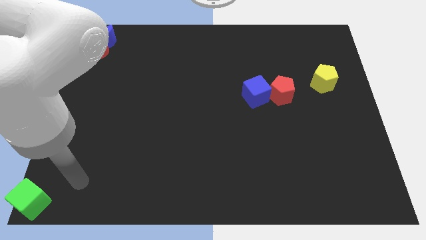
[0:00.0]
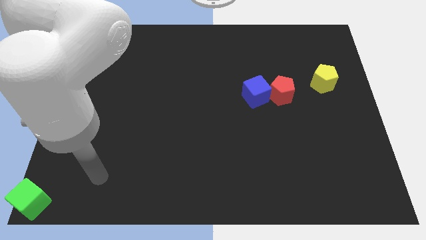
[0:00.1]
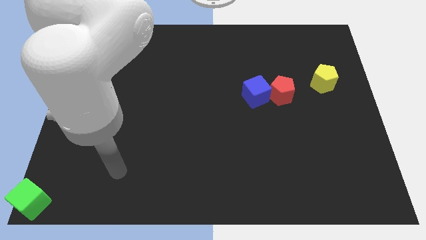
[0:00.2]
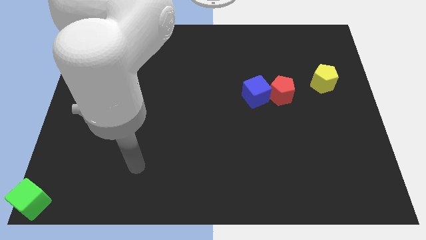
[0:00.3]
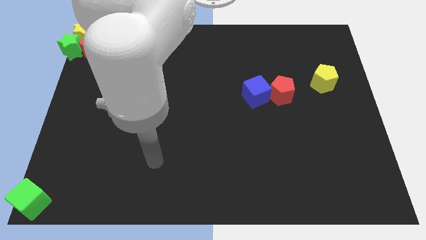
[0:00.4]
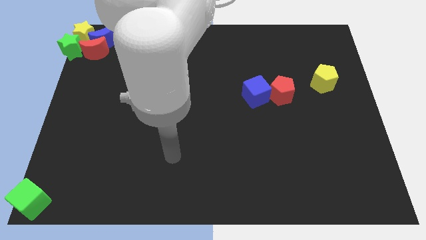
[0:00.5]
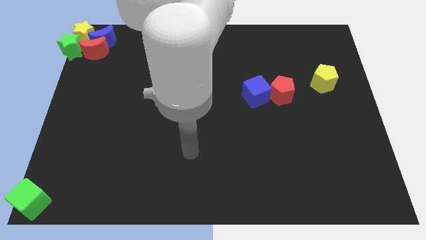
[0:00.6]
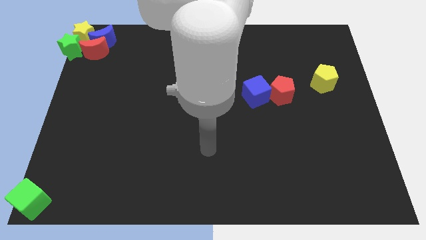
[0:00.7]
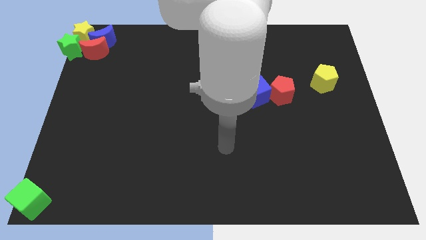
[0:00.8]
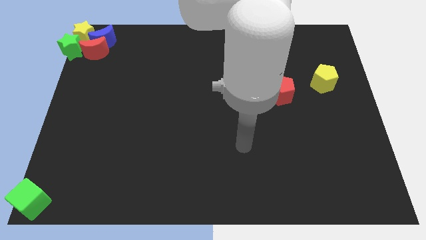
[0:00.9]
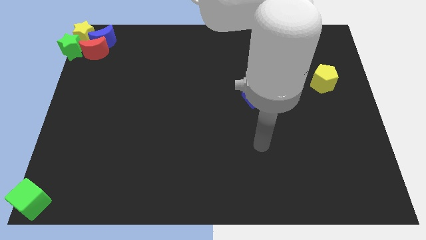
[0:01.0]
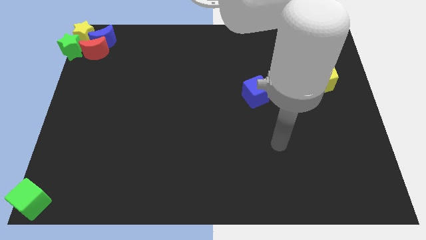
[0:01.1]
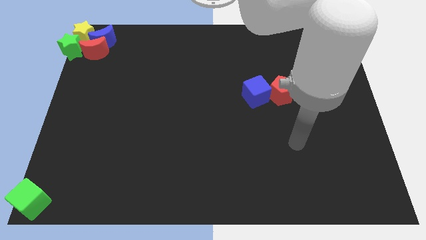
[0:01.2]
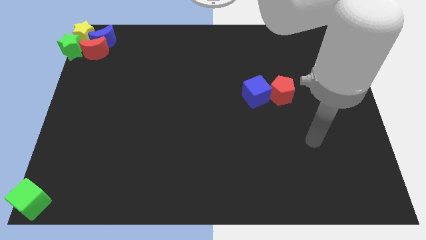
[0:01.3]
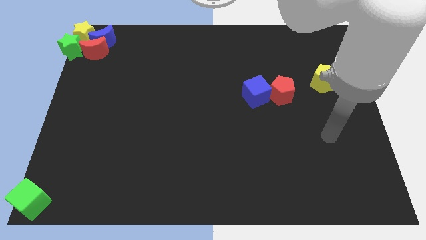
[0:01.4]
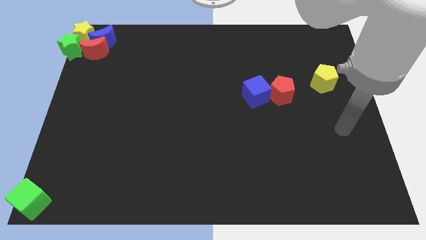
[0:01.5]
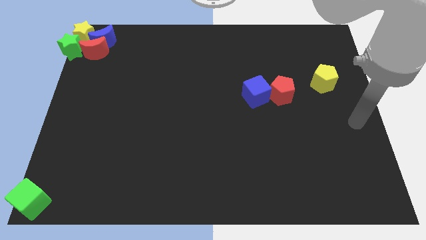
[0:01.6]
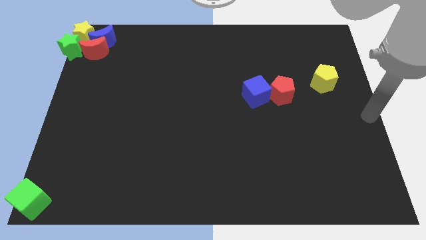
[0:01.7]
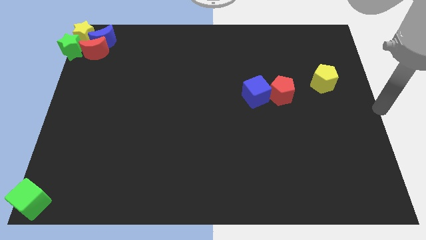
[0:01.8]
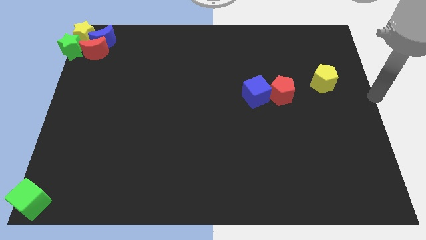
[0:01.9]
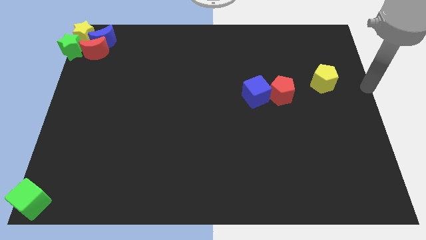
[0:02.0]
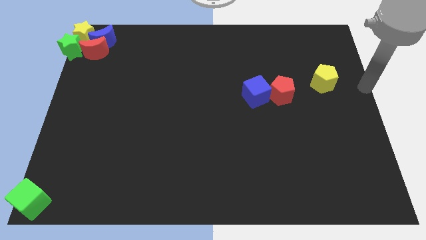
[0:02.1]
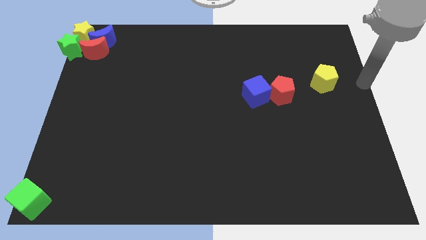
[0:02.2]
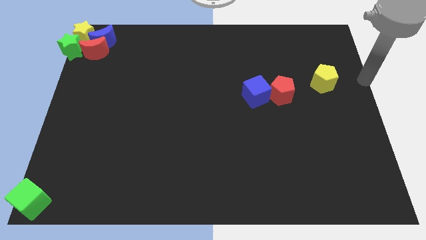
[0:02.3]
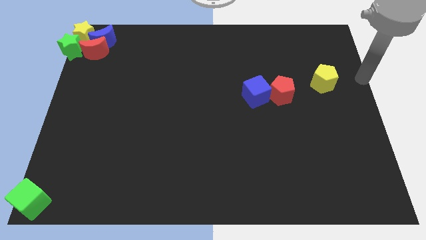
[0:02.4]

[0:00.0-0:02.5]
move your arm to the centre right of the board

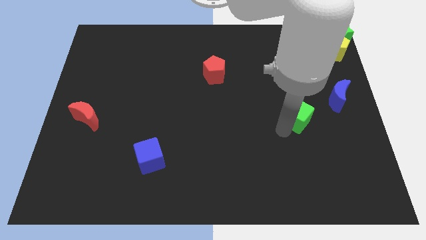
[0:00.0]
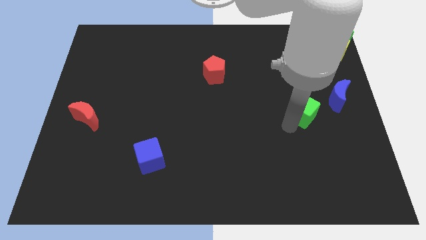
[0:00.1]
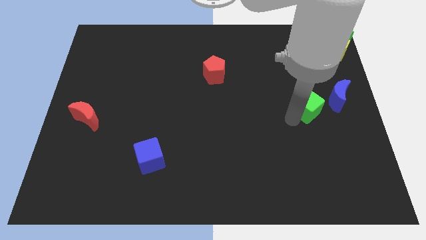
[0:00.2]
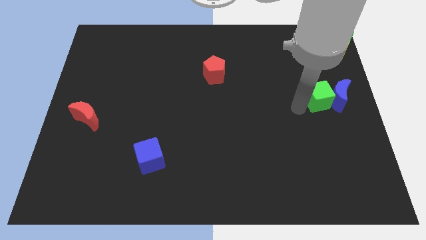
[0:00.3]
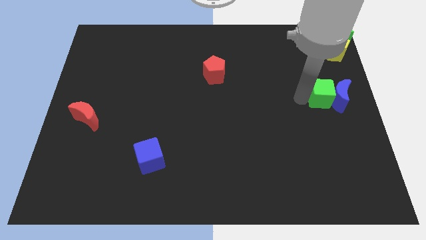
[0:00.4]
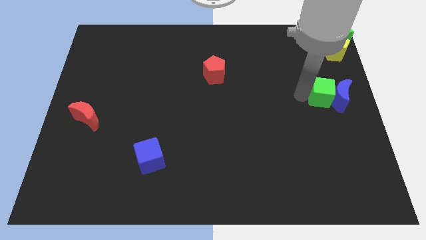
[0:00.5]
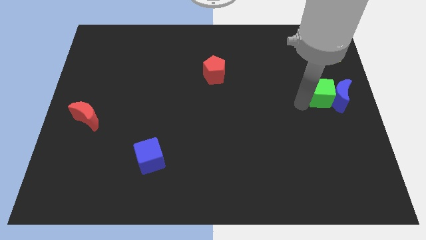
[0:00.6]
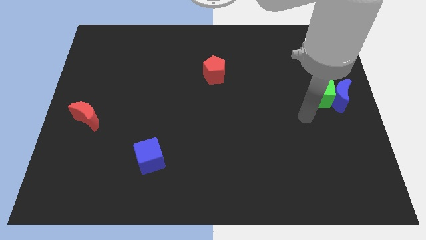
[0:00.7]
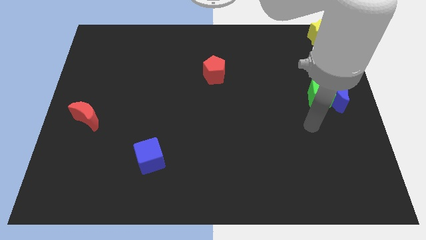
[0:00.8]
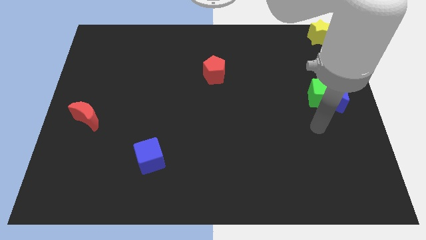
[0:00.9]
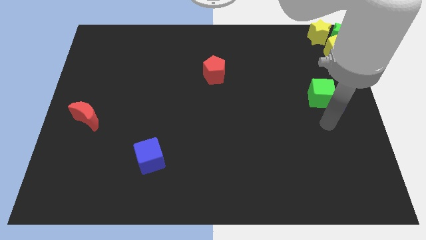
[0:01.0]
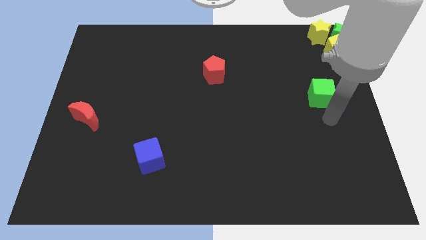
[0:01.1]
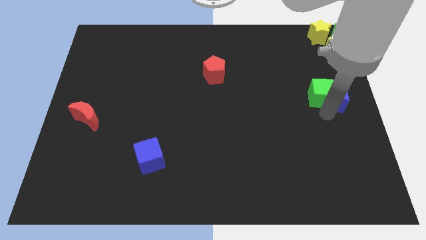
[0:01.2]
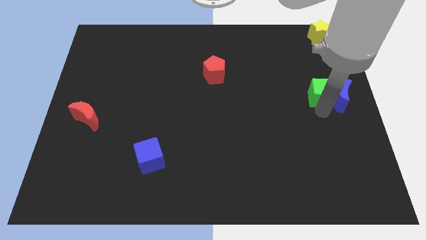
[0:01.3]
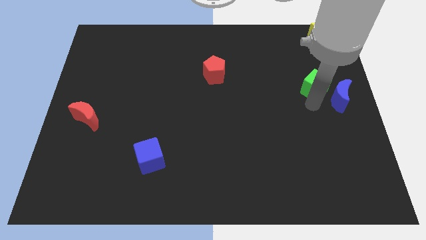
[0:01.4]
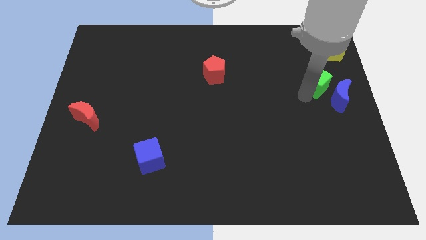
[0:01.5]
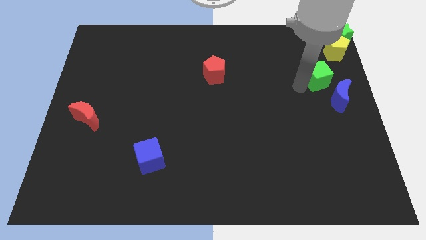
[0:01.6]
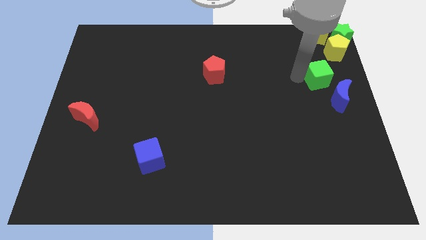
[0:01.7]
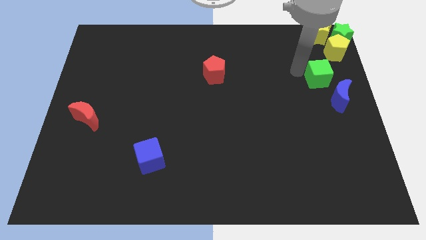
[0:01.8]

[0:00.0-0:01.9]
place the green cube diagonally below the yellow pentagon

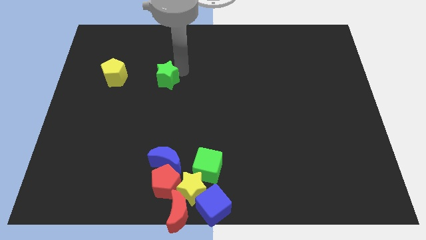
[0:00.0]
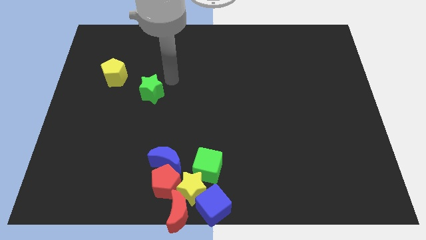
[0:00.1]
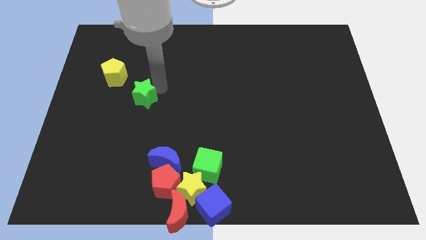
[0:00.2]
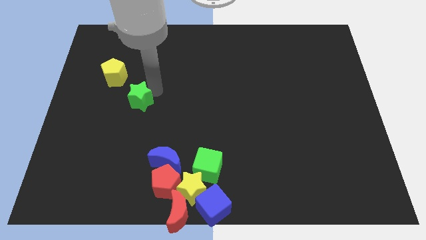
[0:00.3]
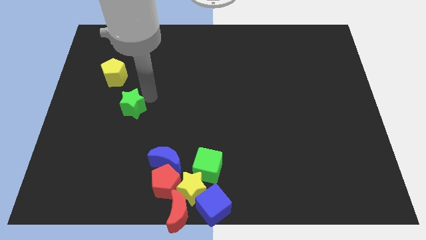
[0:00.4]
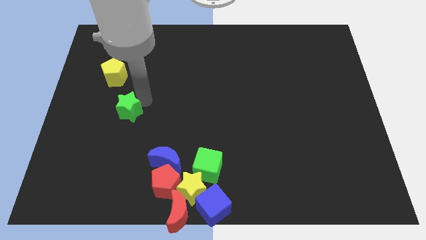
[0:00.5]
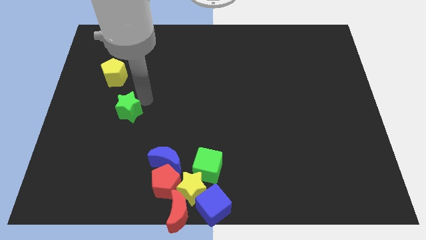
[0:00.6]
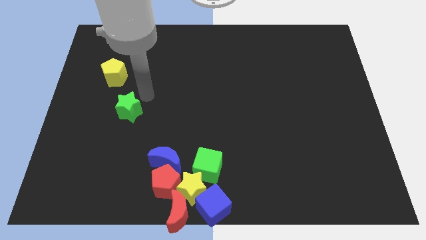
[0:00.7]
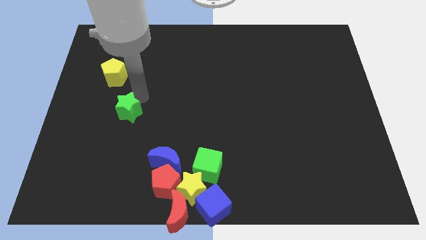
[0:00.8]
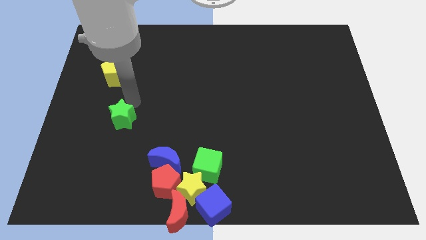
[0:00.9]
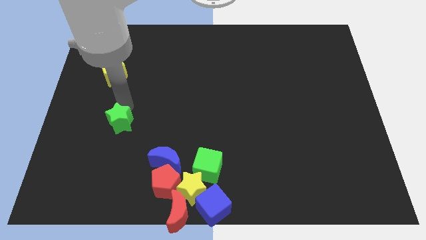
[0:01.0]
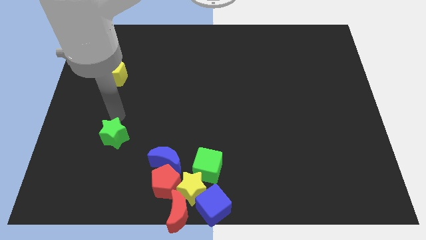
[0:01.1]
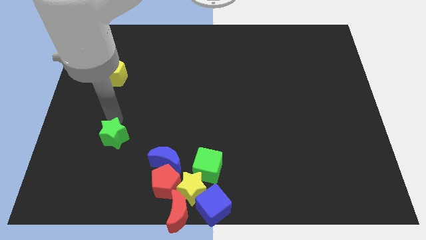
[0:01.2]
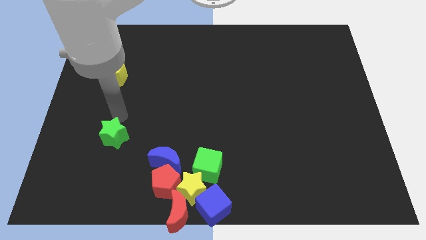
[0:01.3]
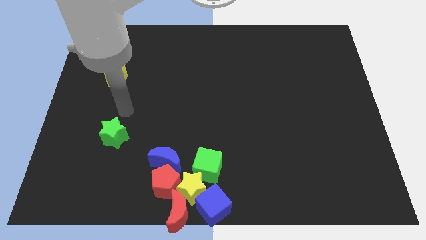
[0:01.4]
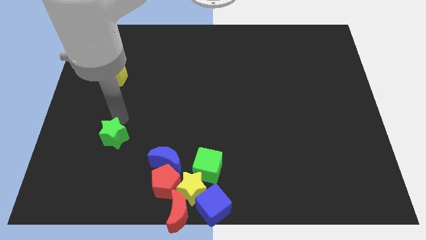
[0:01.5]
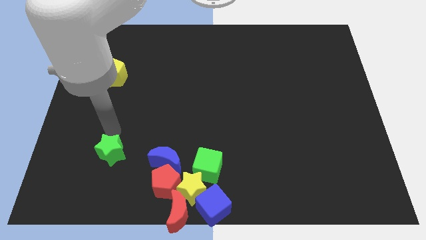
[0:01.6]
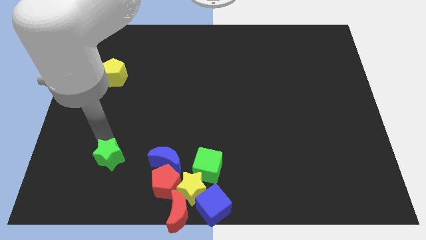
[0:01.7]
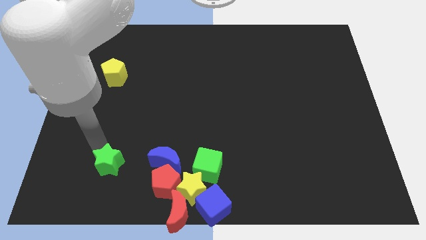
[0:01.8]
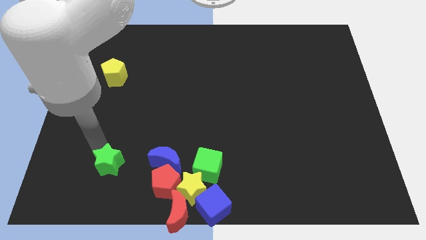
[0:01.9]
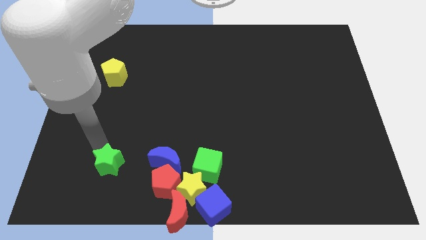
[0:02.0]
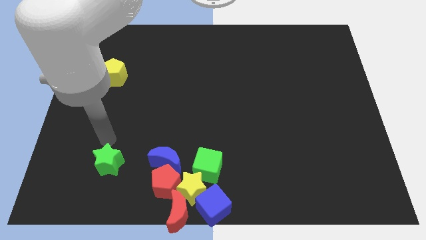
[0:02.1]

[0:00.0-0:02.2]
place the green star left to the blue crescent

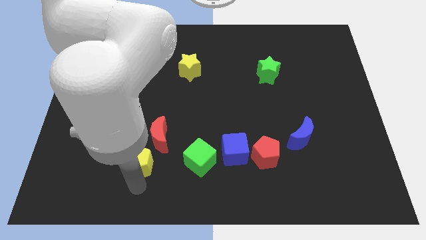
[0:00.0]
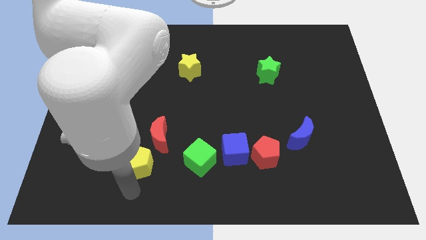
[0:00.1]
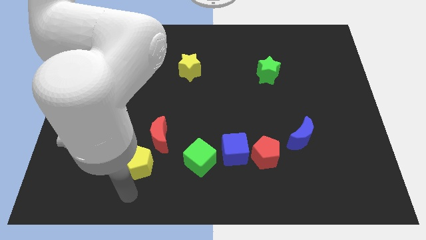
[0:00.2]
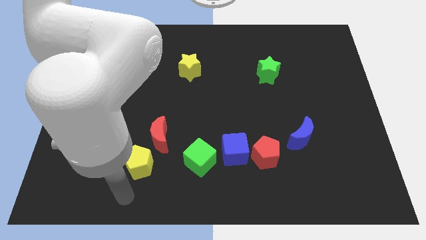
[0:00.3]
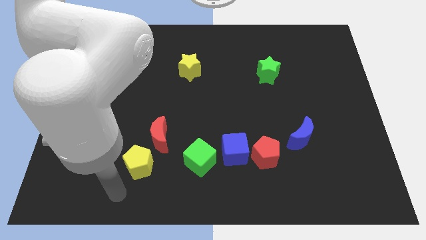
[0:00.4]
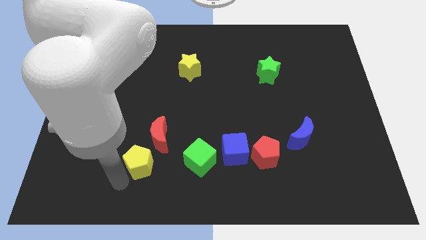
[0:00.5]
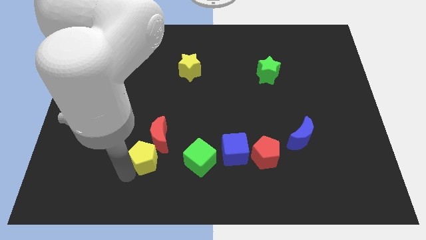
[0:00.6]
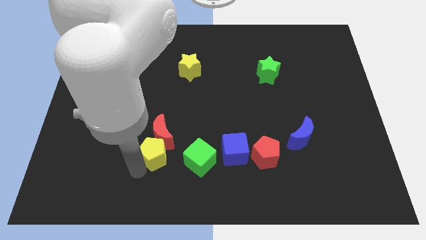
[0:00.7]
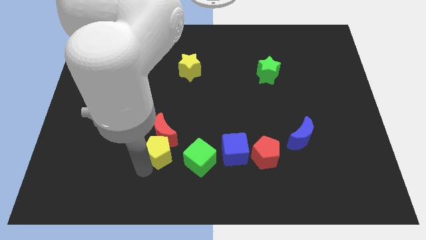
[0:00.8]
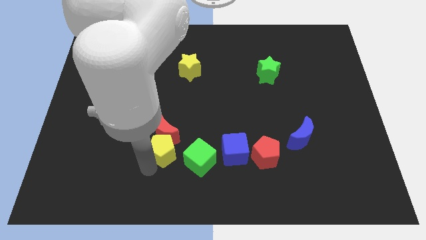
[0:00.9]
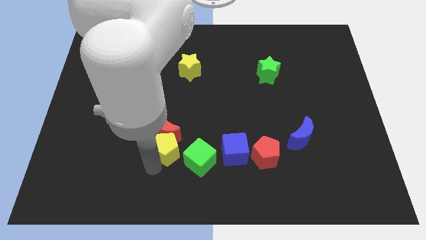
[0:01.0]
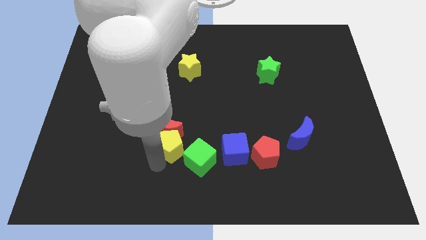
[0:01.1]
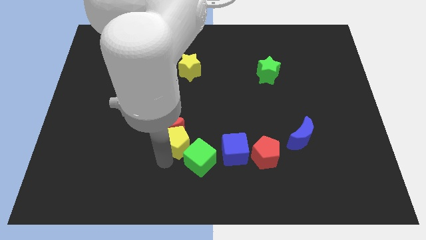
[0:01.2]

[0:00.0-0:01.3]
push the yellow pentagon into the red moon

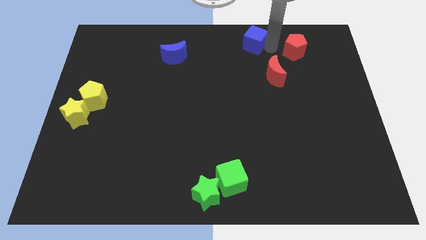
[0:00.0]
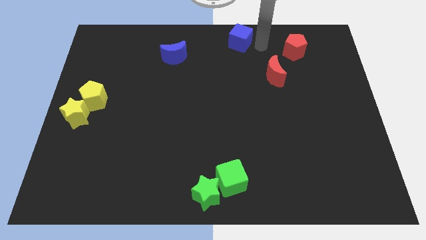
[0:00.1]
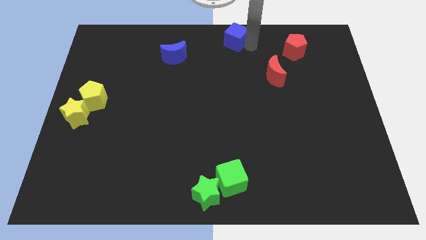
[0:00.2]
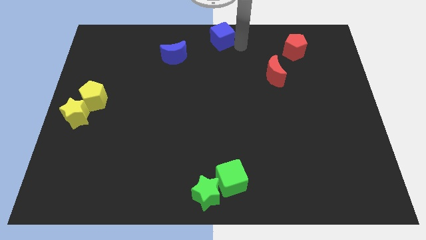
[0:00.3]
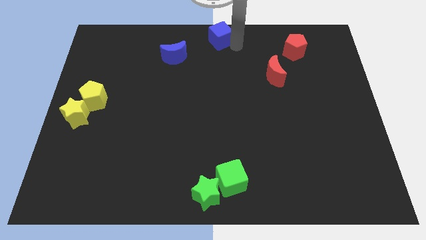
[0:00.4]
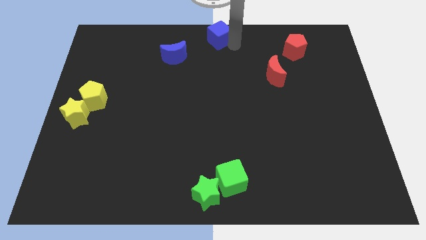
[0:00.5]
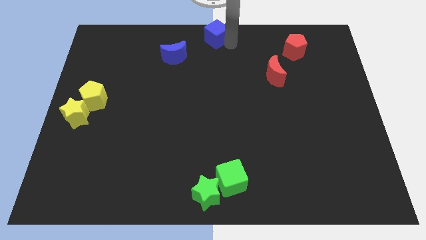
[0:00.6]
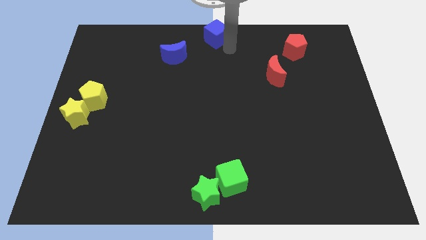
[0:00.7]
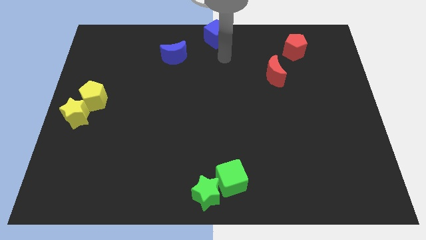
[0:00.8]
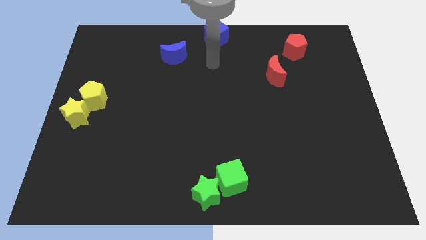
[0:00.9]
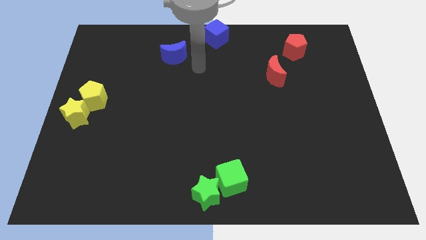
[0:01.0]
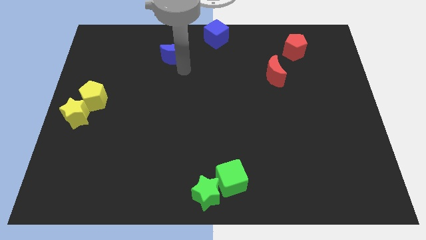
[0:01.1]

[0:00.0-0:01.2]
put the blue cube at the top center of the board
